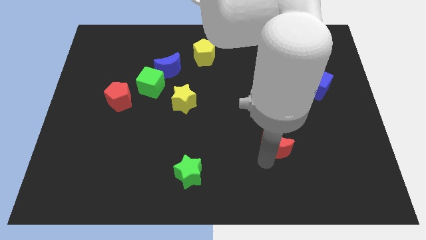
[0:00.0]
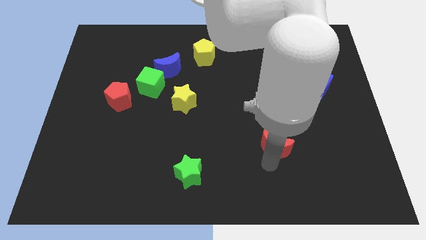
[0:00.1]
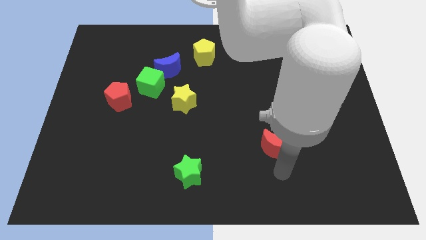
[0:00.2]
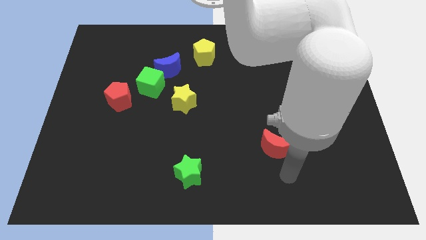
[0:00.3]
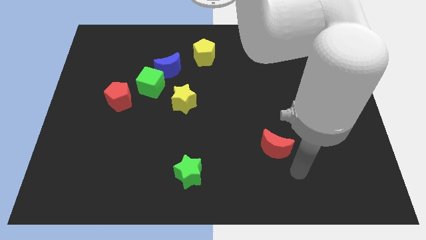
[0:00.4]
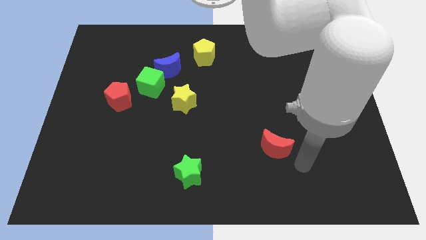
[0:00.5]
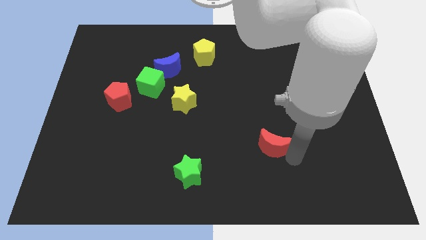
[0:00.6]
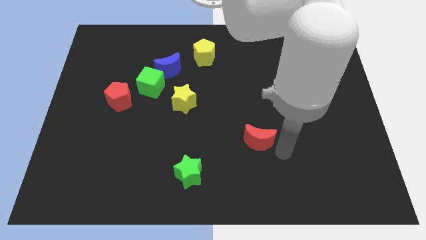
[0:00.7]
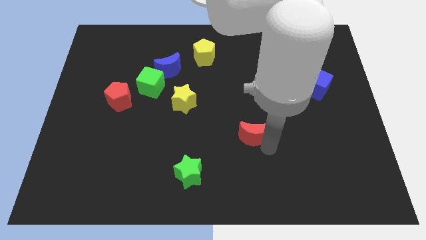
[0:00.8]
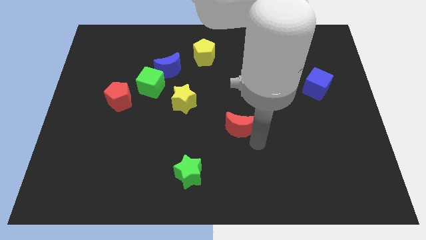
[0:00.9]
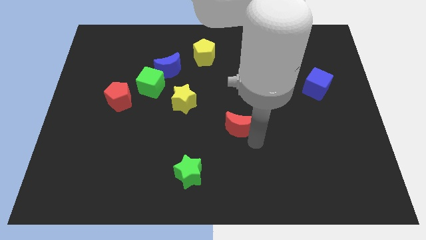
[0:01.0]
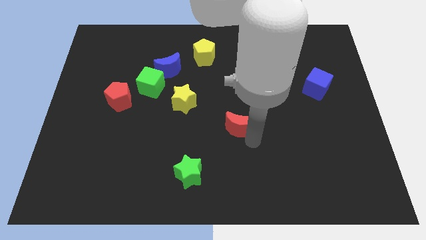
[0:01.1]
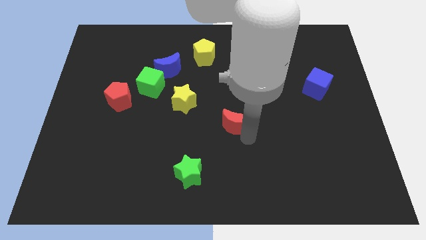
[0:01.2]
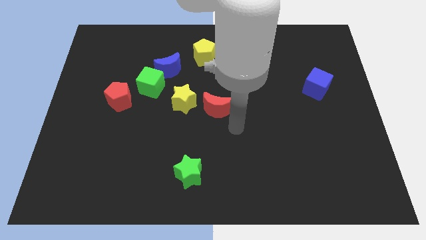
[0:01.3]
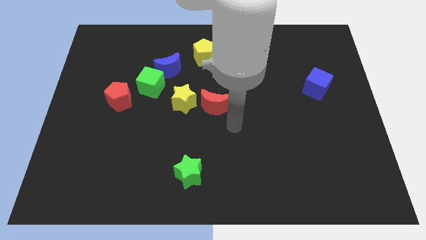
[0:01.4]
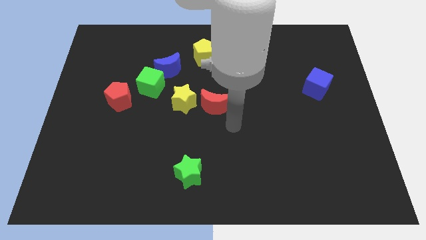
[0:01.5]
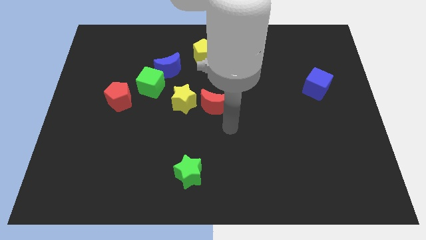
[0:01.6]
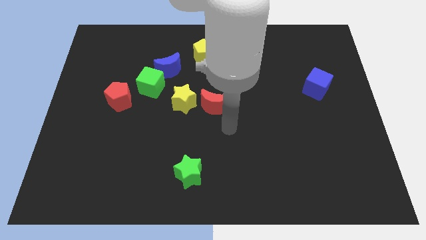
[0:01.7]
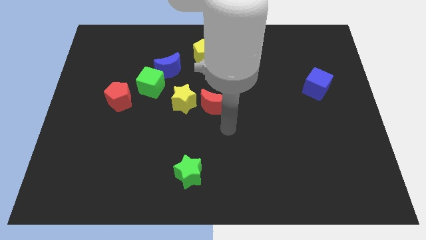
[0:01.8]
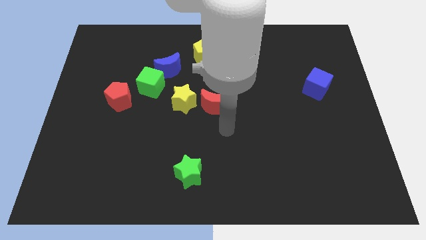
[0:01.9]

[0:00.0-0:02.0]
push the red moon to the center of the board

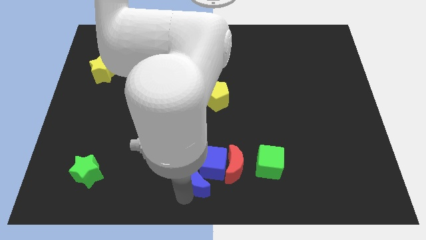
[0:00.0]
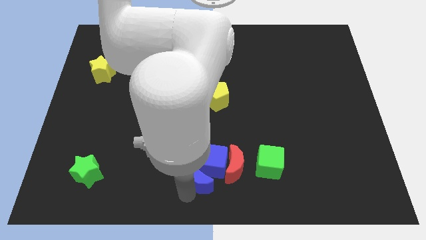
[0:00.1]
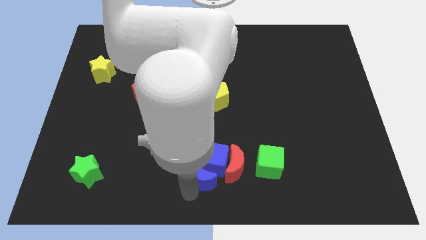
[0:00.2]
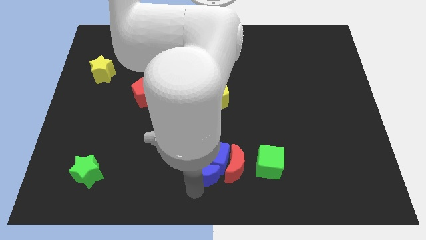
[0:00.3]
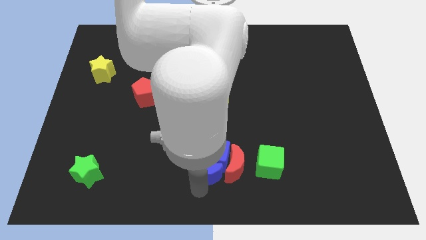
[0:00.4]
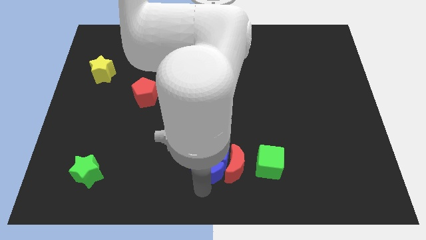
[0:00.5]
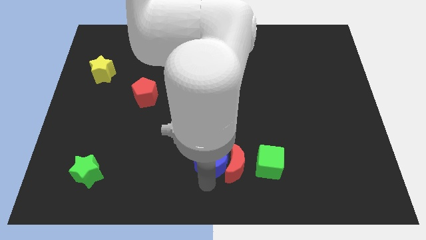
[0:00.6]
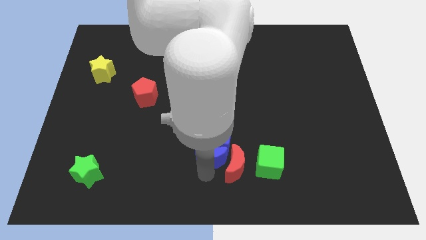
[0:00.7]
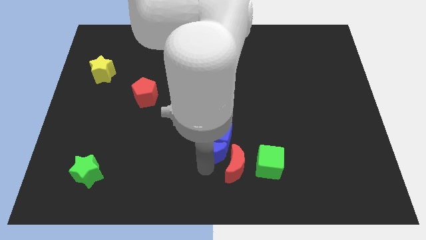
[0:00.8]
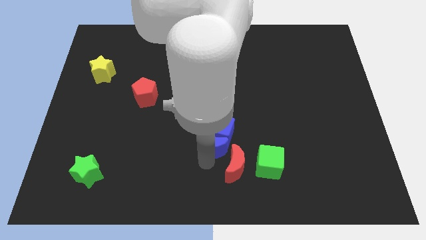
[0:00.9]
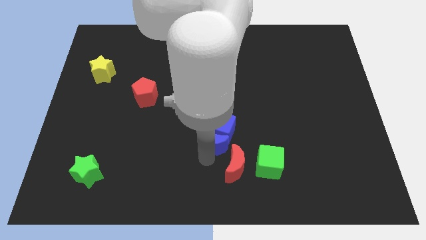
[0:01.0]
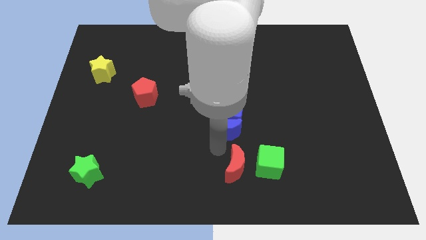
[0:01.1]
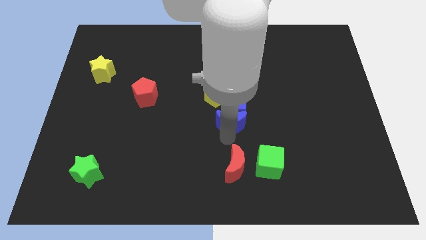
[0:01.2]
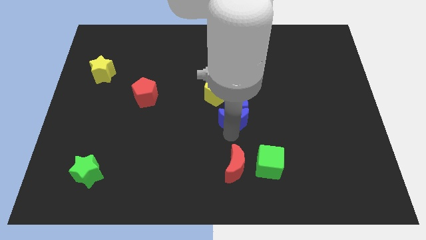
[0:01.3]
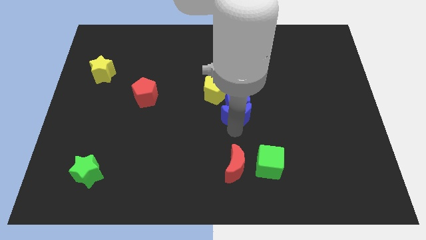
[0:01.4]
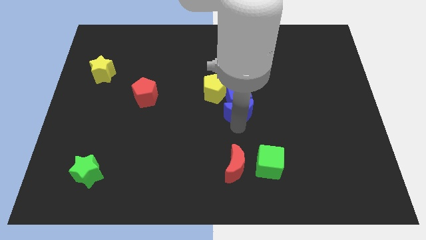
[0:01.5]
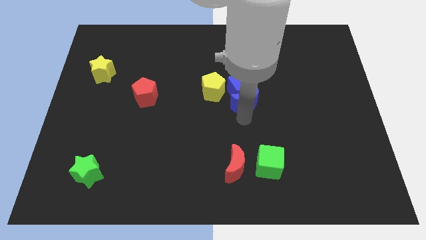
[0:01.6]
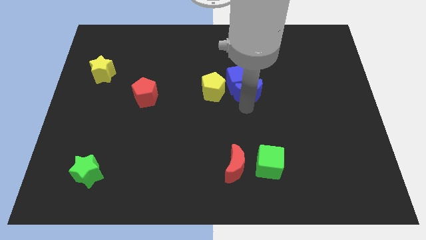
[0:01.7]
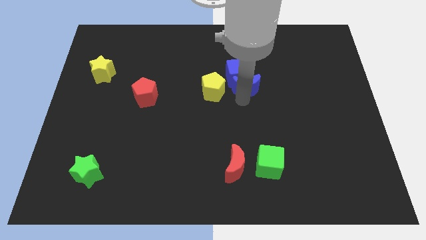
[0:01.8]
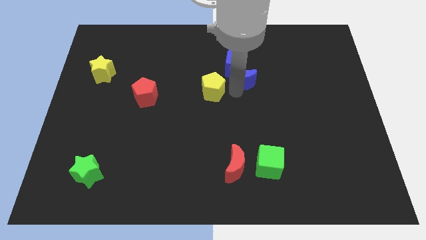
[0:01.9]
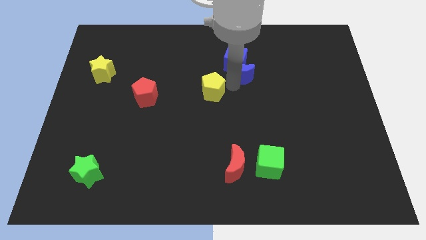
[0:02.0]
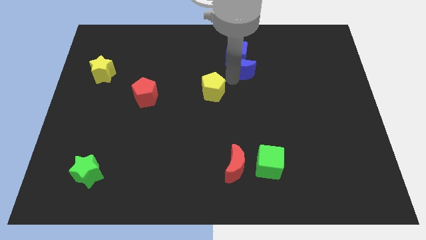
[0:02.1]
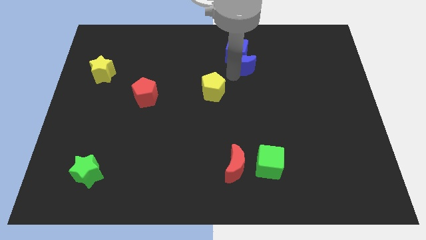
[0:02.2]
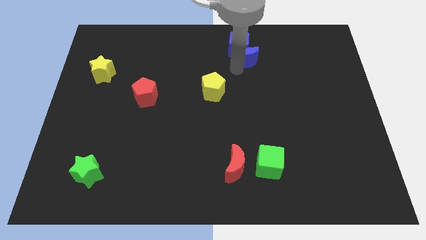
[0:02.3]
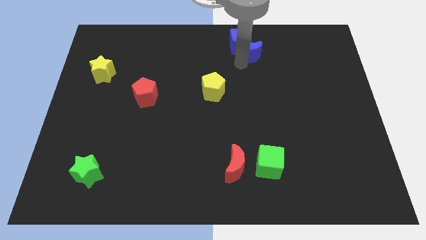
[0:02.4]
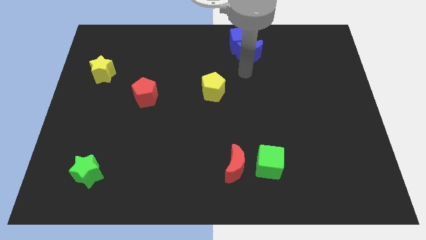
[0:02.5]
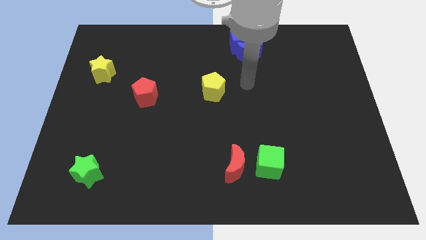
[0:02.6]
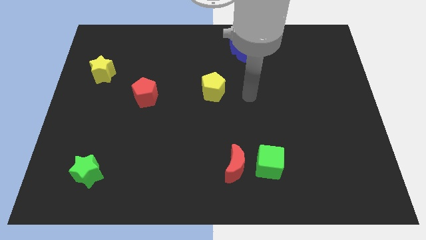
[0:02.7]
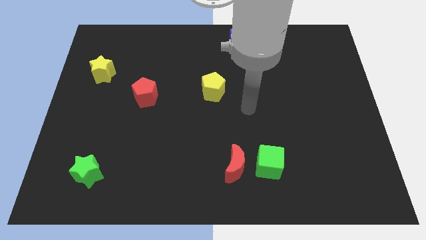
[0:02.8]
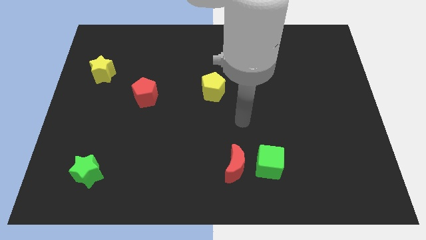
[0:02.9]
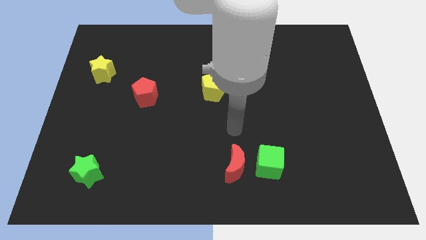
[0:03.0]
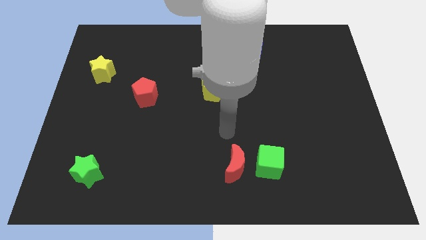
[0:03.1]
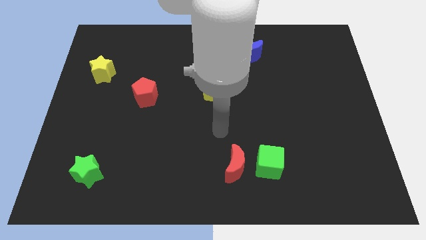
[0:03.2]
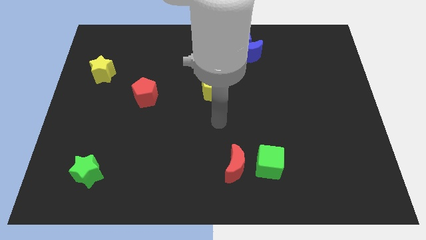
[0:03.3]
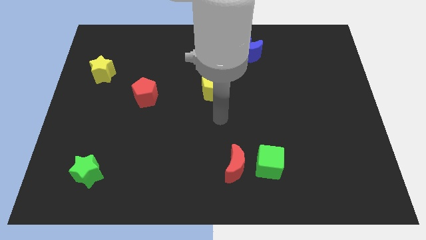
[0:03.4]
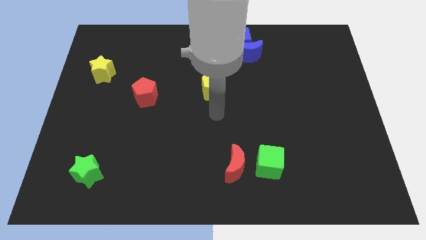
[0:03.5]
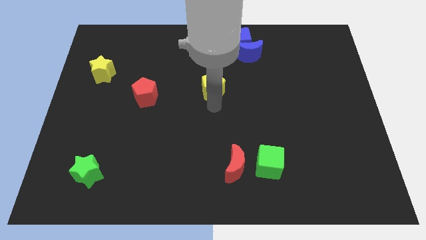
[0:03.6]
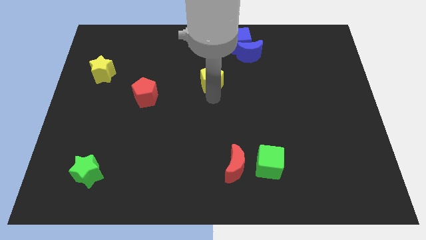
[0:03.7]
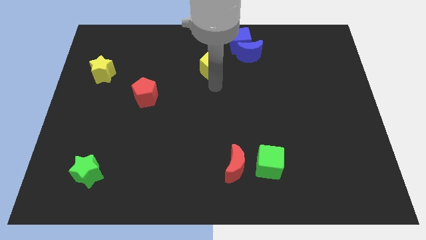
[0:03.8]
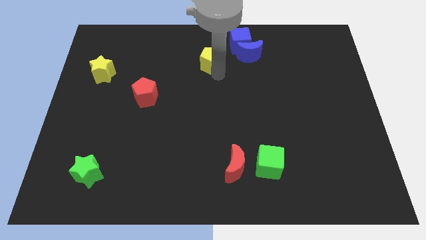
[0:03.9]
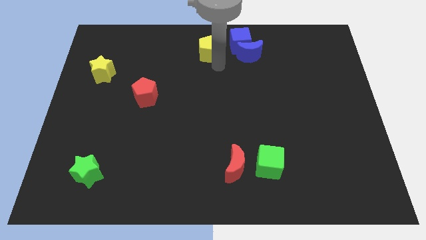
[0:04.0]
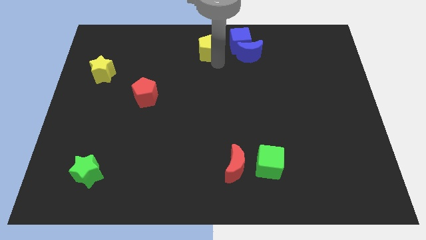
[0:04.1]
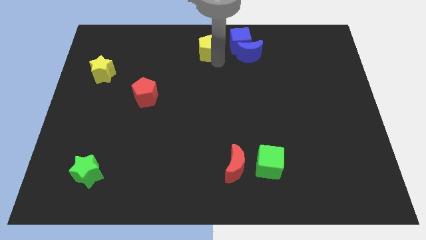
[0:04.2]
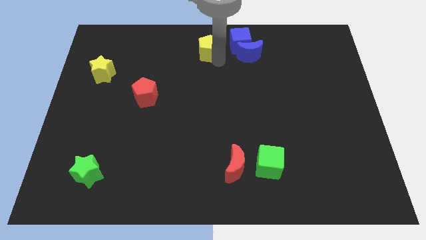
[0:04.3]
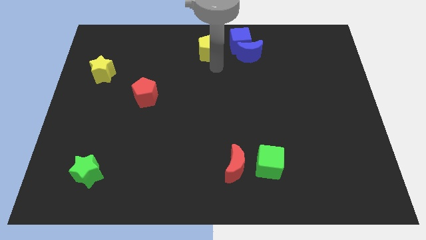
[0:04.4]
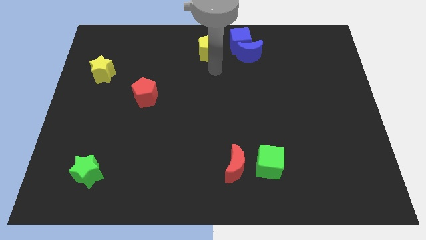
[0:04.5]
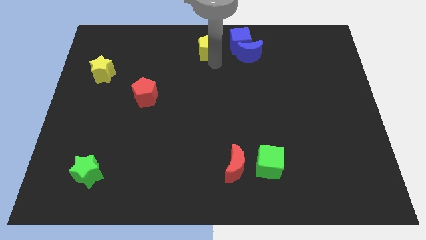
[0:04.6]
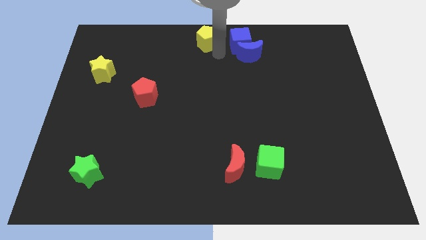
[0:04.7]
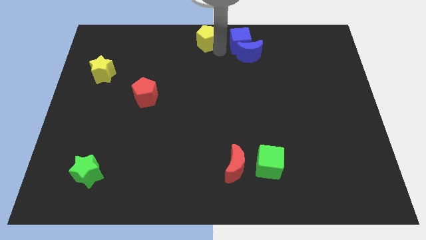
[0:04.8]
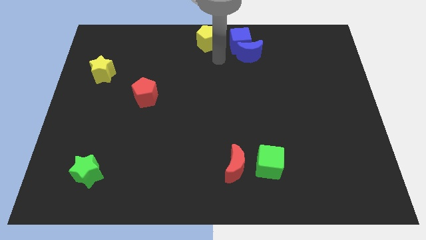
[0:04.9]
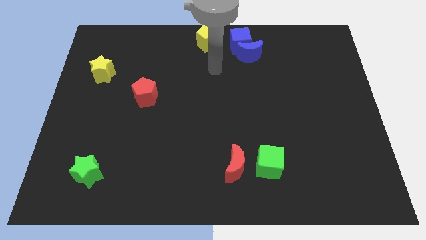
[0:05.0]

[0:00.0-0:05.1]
push the yellow pentagon slightly upwards

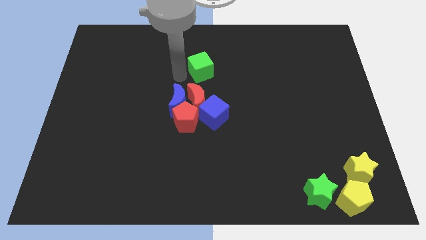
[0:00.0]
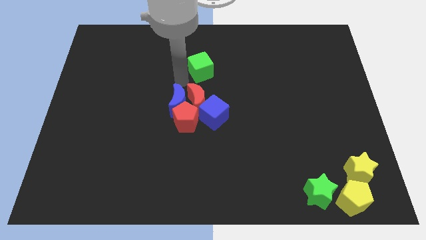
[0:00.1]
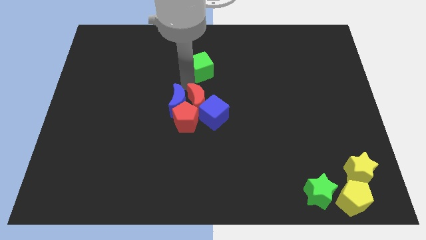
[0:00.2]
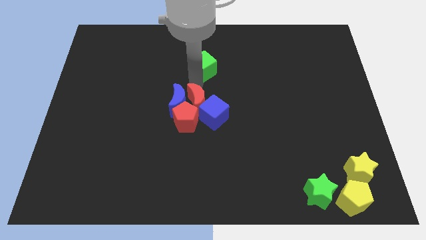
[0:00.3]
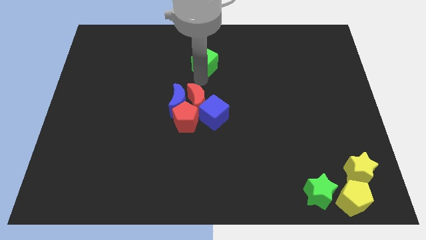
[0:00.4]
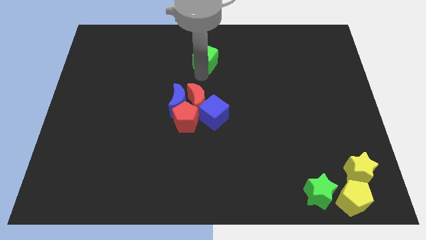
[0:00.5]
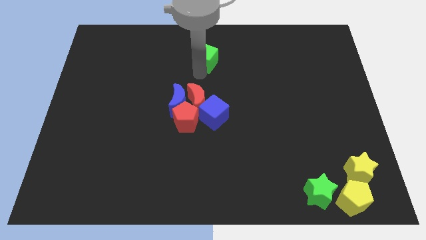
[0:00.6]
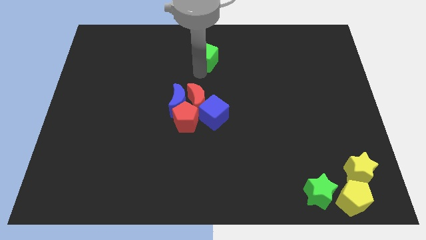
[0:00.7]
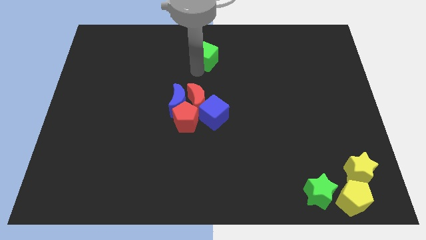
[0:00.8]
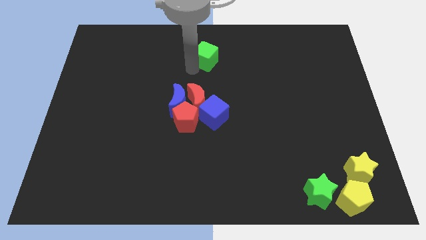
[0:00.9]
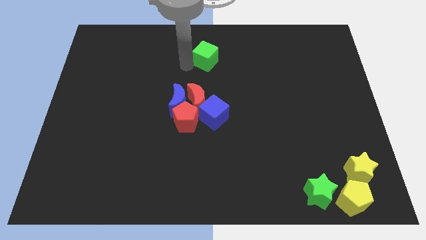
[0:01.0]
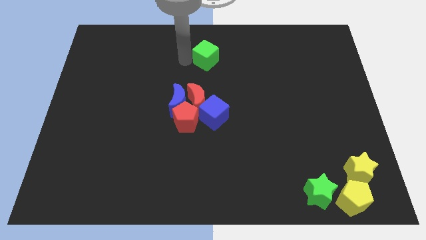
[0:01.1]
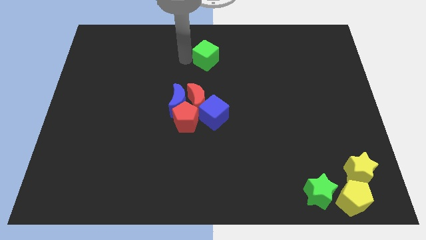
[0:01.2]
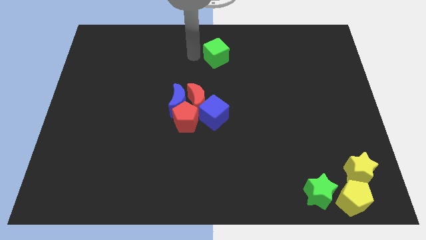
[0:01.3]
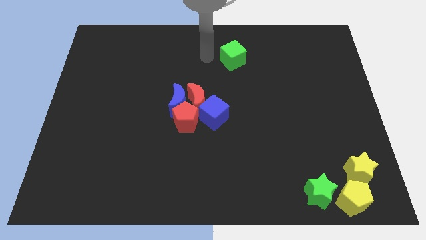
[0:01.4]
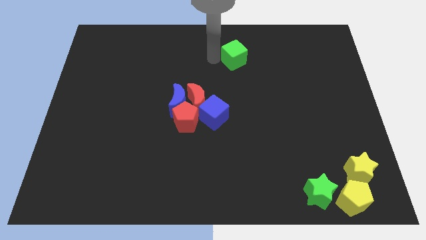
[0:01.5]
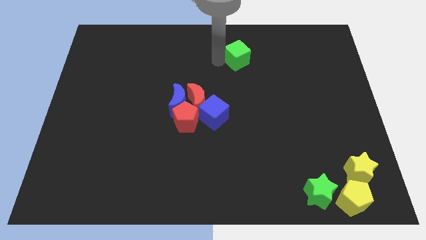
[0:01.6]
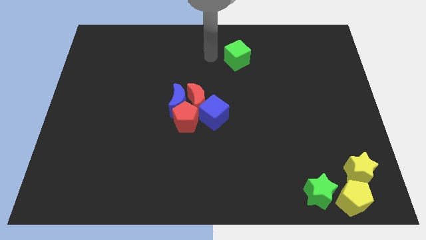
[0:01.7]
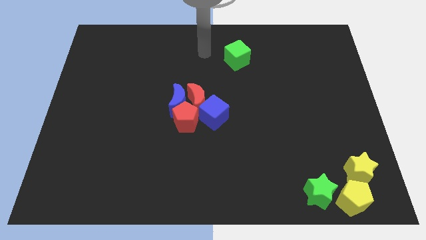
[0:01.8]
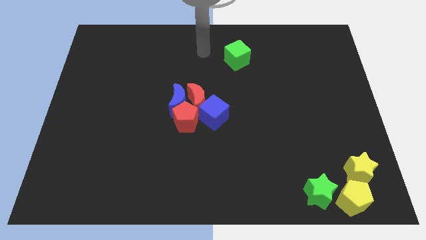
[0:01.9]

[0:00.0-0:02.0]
drag the green cube diagonally top right to the red crescent
